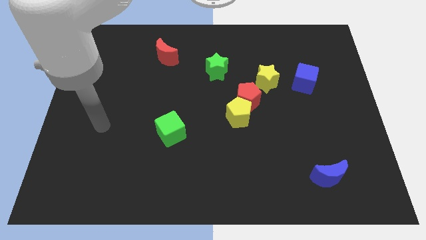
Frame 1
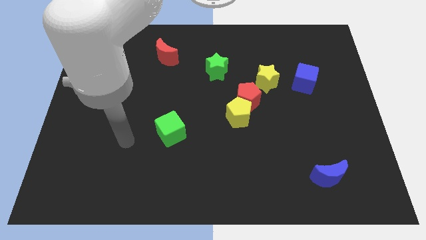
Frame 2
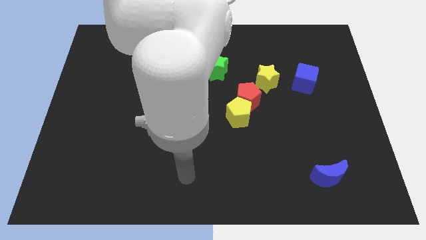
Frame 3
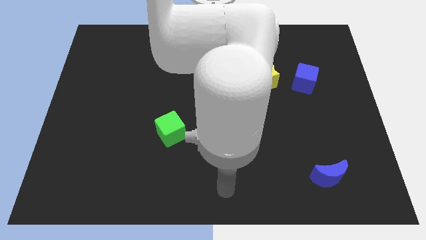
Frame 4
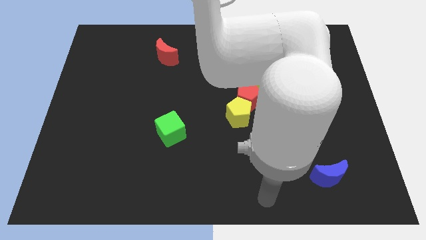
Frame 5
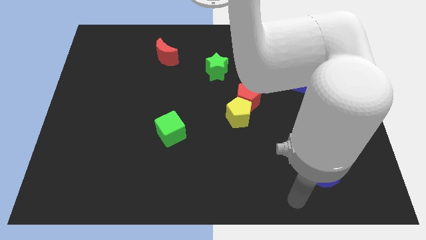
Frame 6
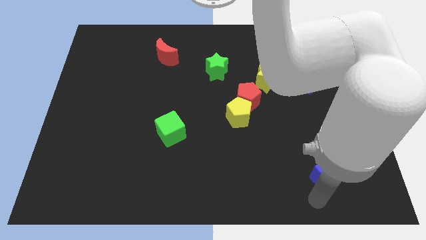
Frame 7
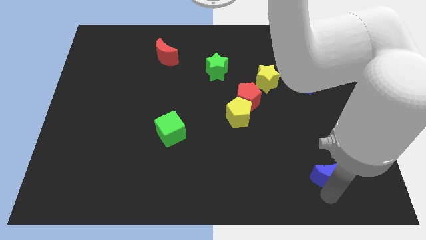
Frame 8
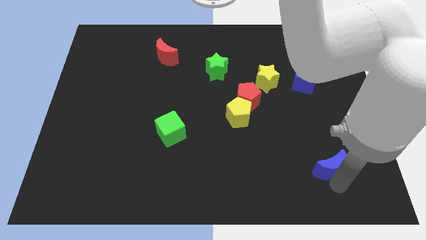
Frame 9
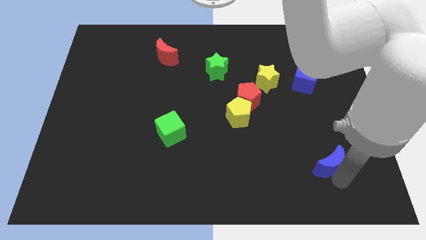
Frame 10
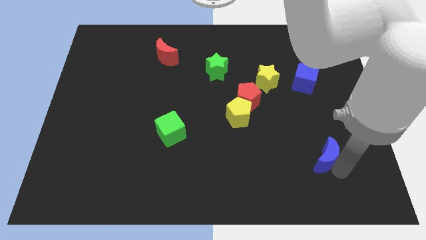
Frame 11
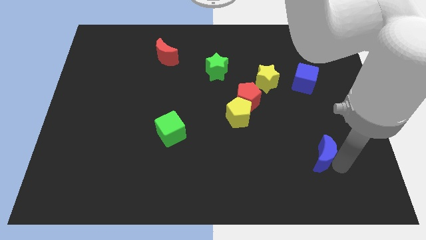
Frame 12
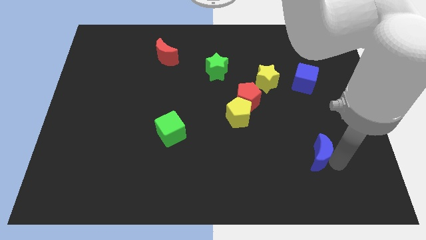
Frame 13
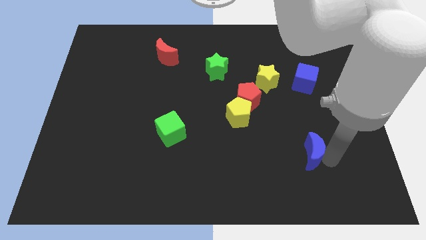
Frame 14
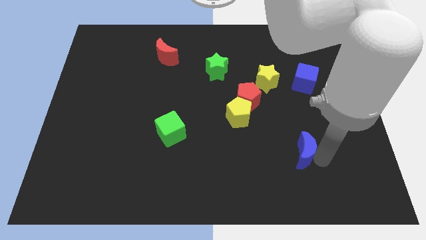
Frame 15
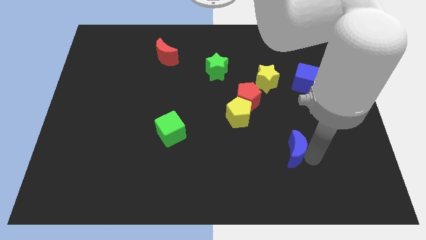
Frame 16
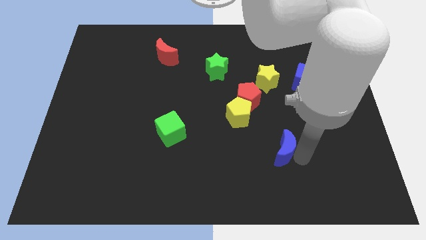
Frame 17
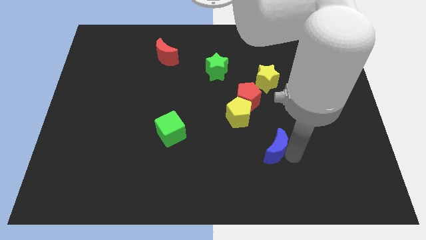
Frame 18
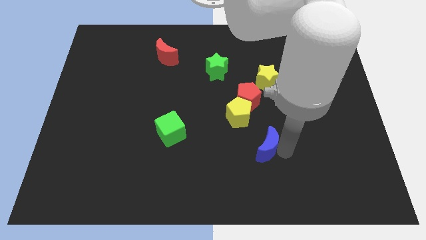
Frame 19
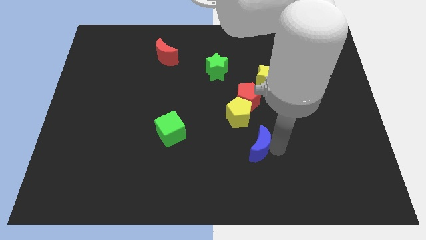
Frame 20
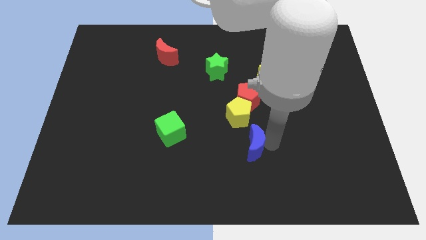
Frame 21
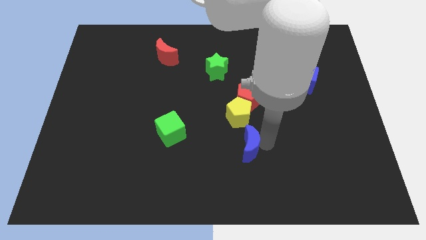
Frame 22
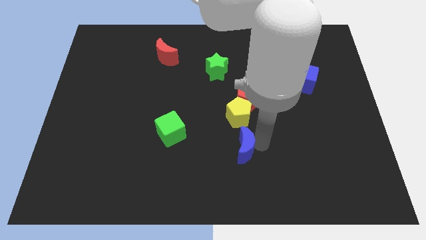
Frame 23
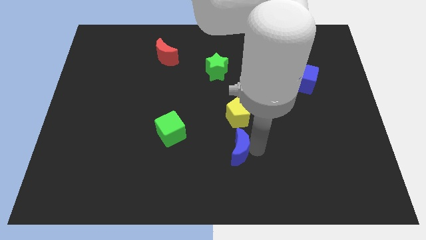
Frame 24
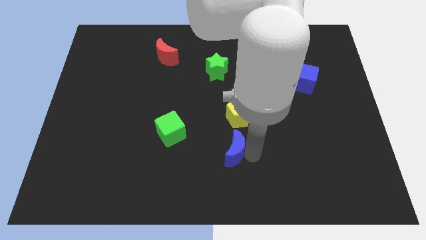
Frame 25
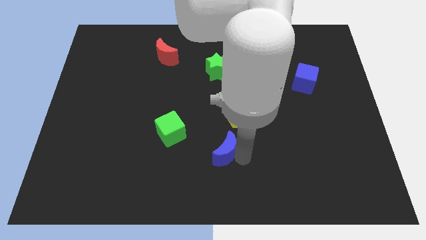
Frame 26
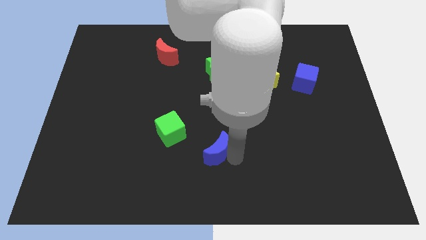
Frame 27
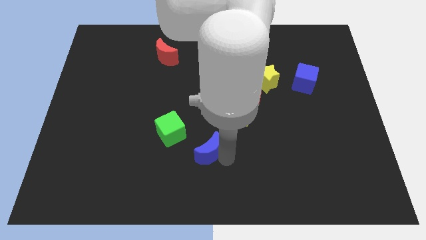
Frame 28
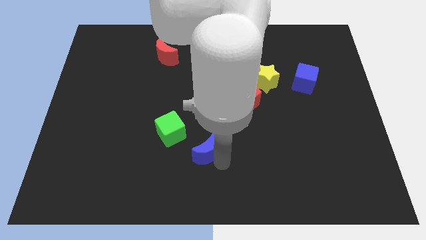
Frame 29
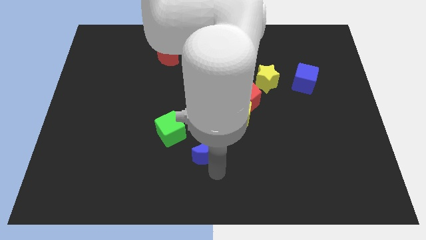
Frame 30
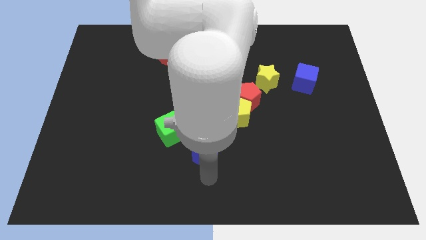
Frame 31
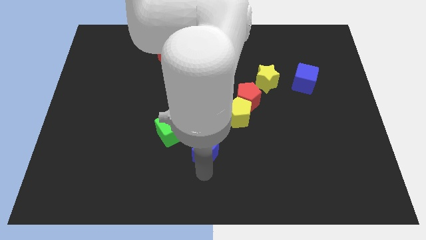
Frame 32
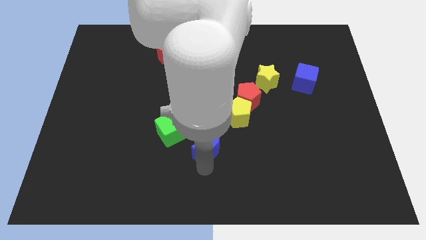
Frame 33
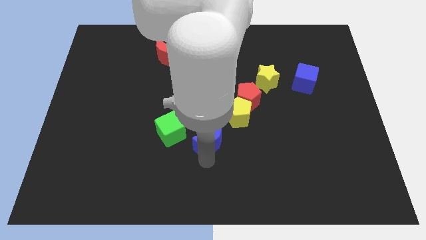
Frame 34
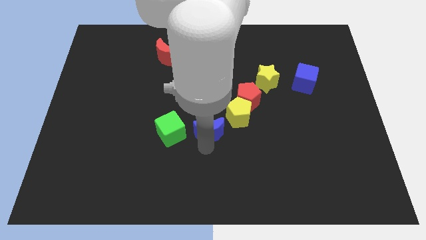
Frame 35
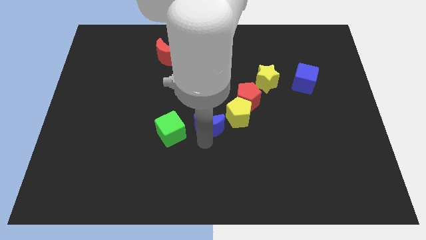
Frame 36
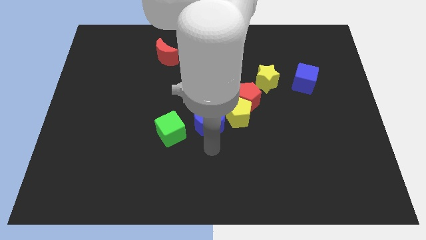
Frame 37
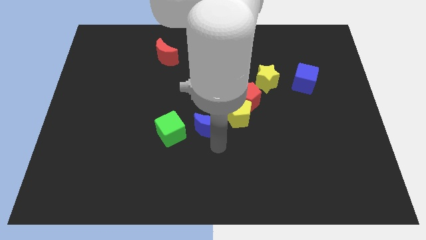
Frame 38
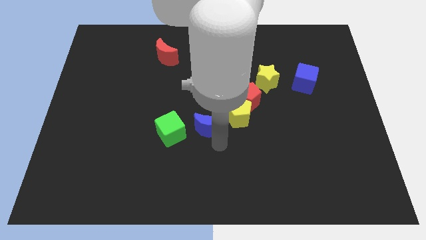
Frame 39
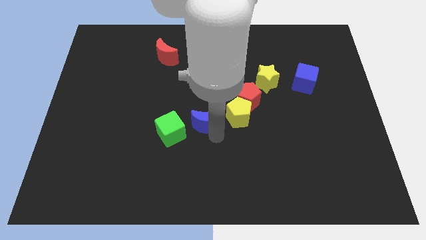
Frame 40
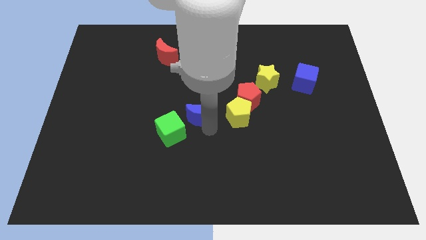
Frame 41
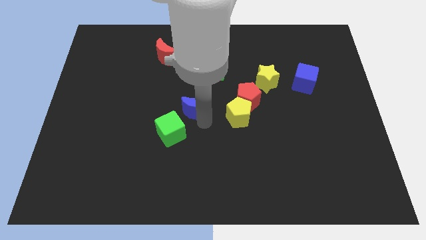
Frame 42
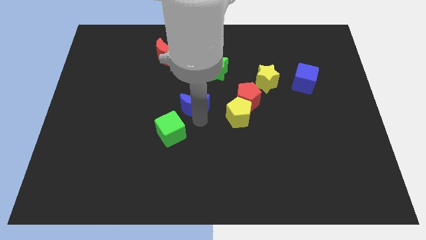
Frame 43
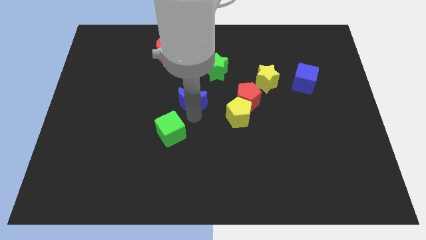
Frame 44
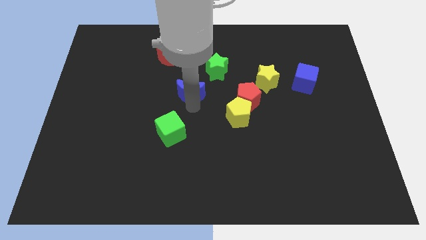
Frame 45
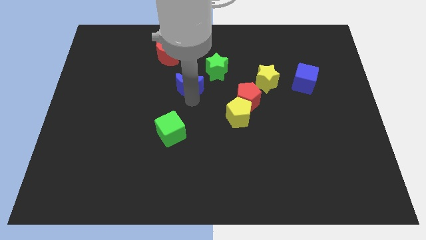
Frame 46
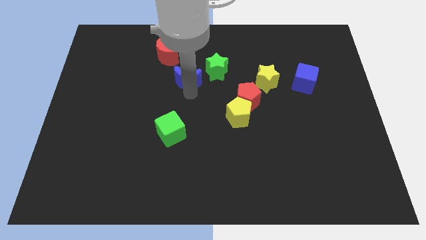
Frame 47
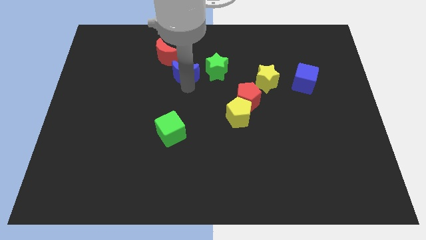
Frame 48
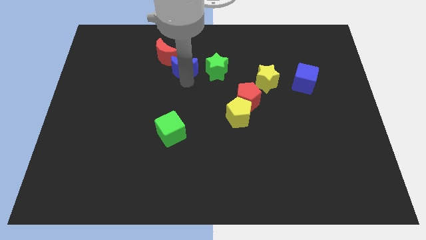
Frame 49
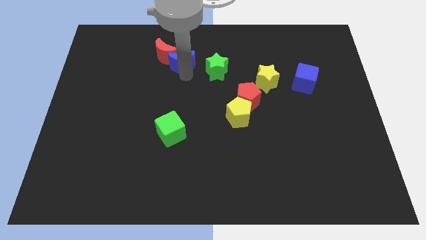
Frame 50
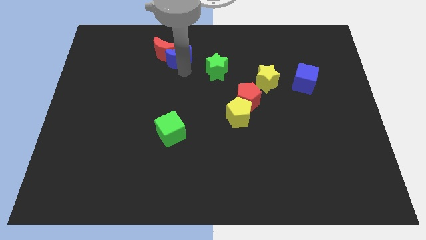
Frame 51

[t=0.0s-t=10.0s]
slide the blue moon to the red moon

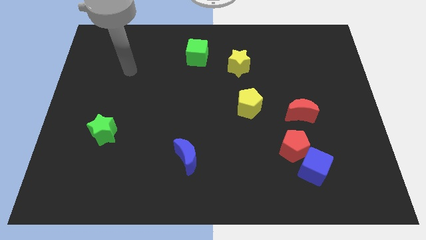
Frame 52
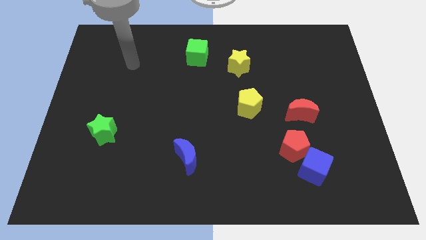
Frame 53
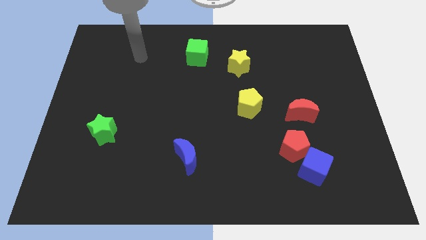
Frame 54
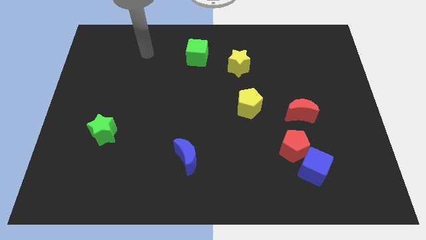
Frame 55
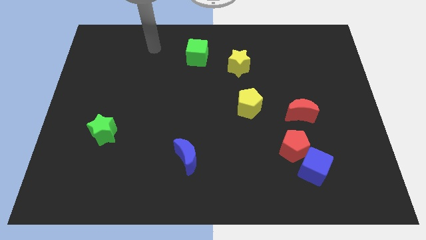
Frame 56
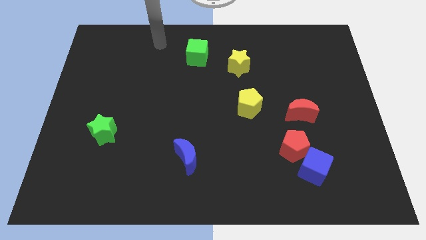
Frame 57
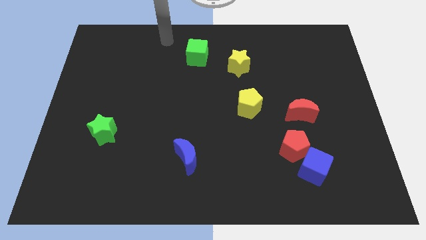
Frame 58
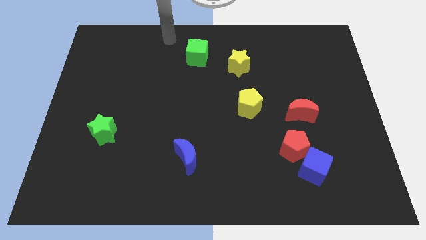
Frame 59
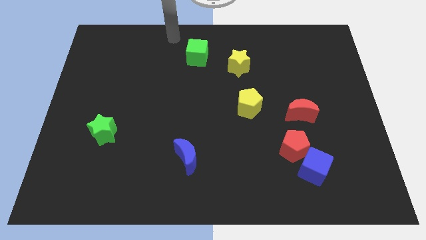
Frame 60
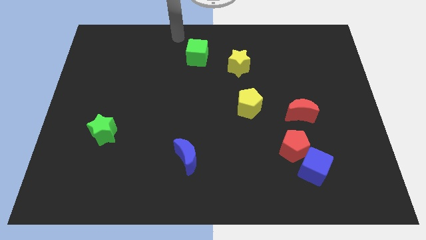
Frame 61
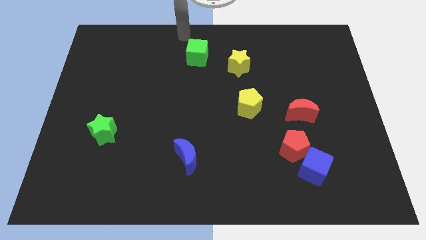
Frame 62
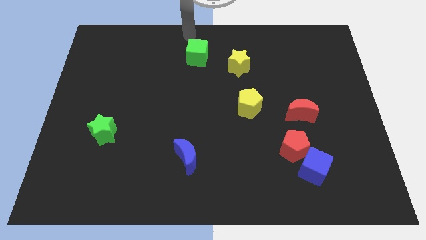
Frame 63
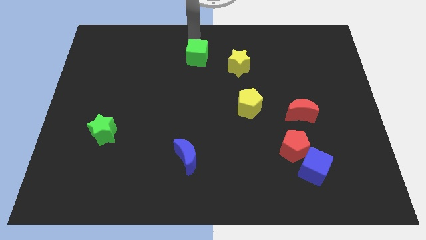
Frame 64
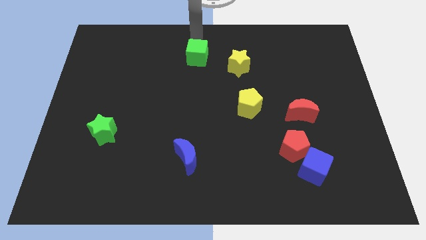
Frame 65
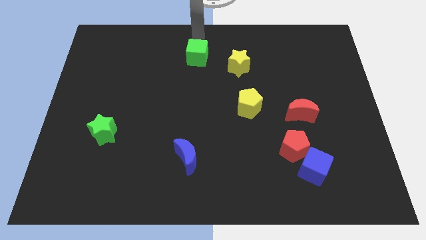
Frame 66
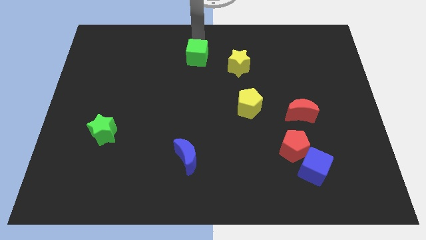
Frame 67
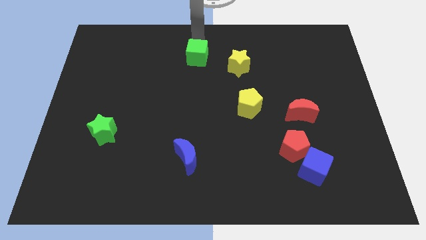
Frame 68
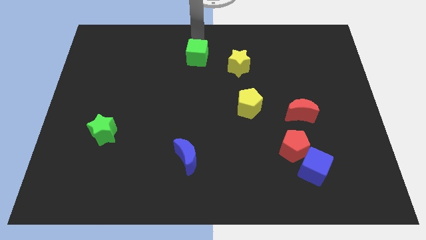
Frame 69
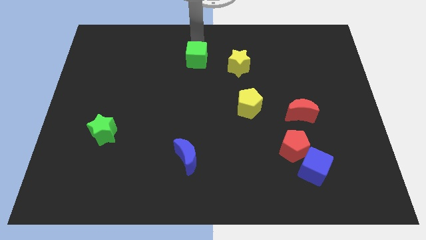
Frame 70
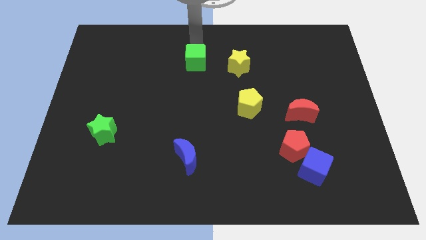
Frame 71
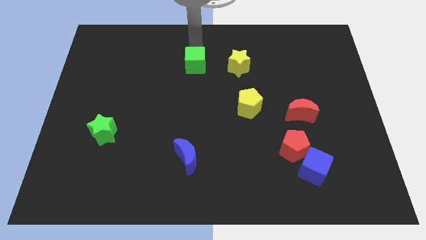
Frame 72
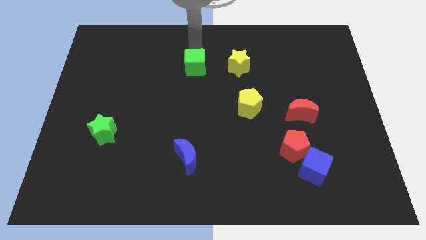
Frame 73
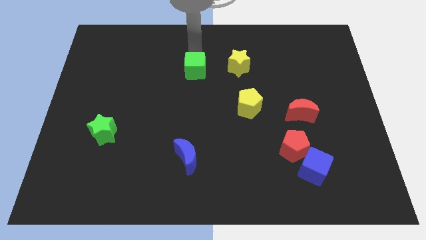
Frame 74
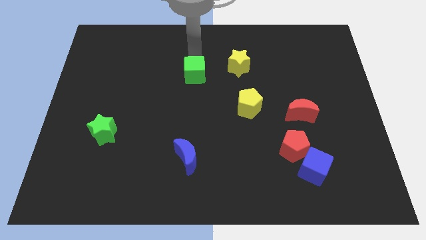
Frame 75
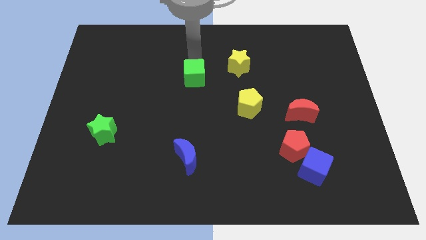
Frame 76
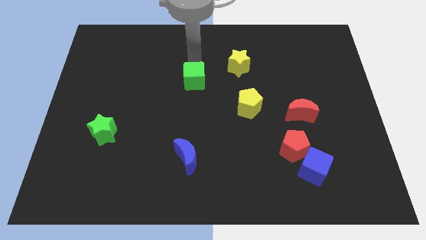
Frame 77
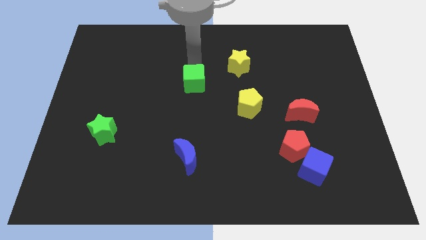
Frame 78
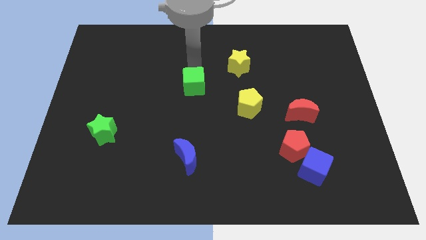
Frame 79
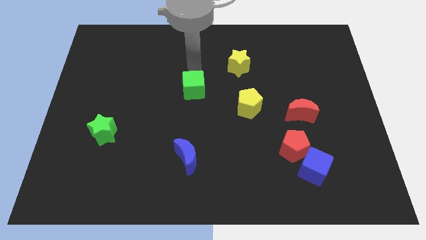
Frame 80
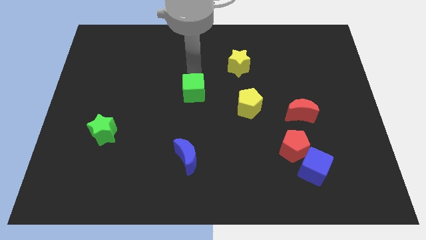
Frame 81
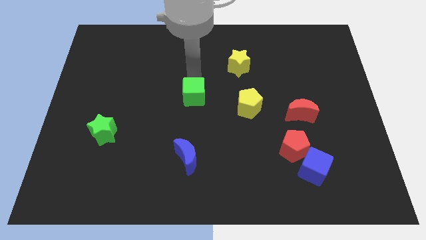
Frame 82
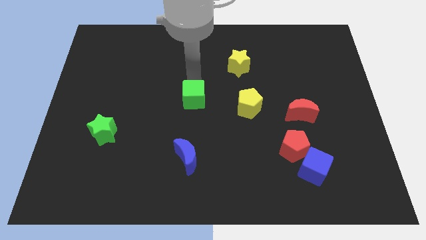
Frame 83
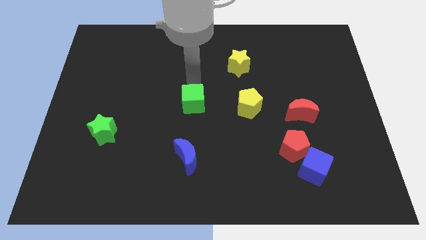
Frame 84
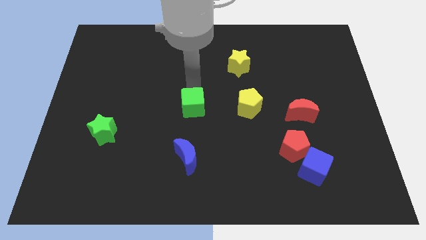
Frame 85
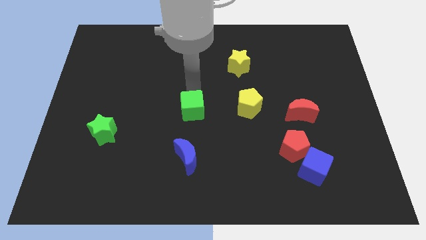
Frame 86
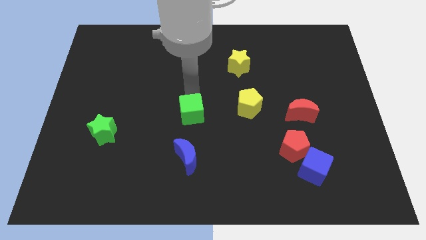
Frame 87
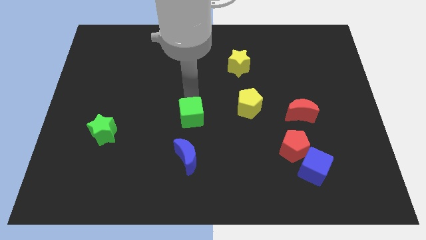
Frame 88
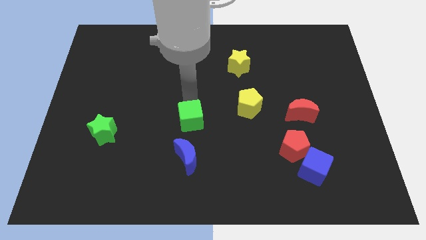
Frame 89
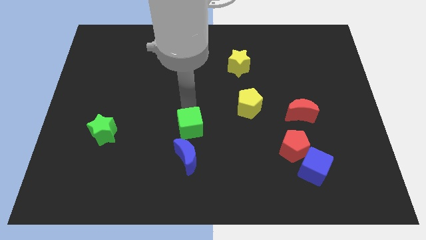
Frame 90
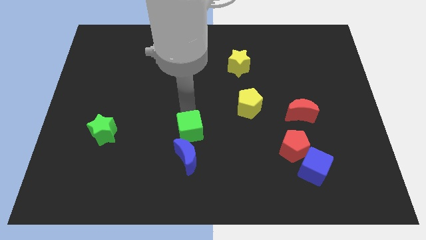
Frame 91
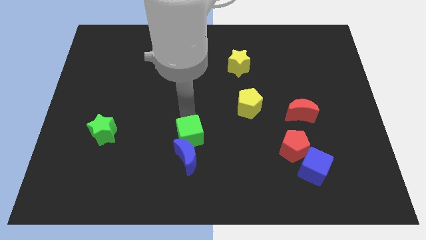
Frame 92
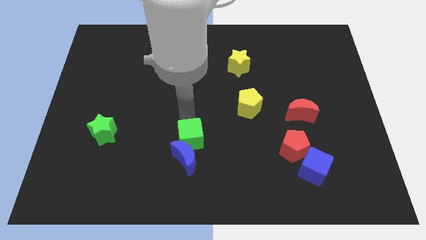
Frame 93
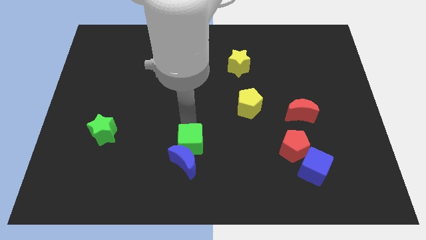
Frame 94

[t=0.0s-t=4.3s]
move the green cube next to the blue moon
